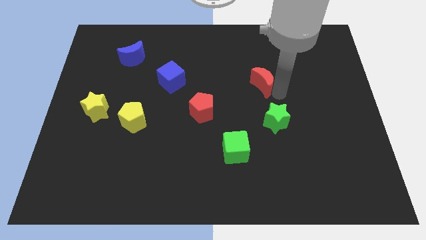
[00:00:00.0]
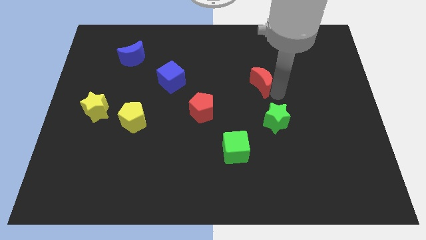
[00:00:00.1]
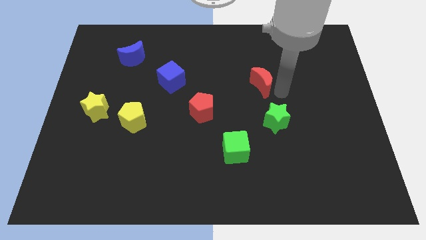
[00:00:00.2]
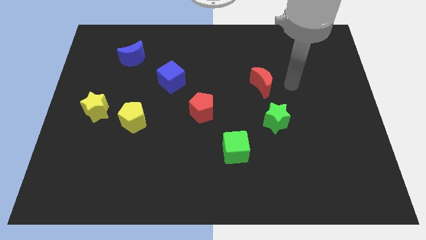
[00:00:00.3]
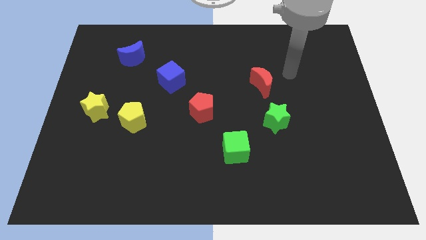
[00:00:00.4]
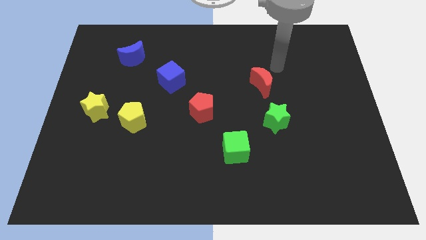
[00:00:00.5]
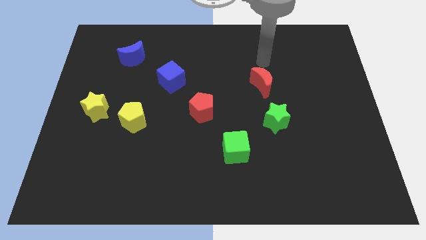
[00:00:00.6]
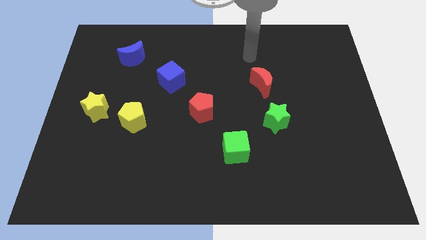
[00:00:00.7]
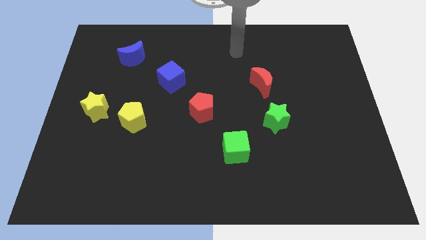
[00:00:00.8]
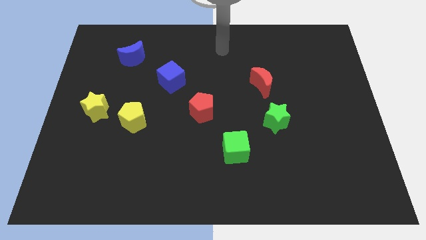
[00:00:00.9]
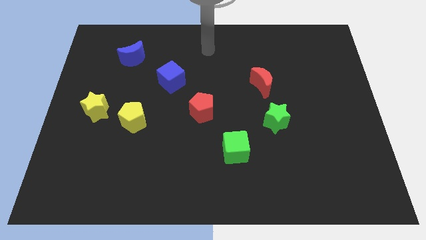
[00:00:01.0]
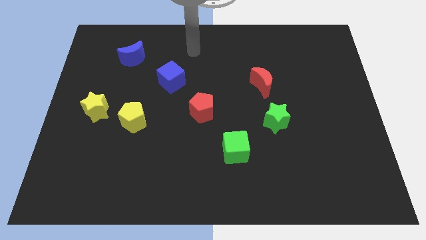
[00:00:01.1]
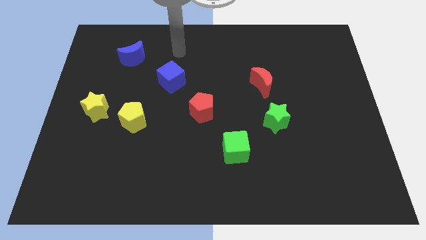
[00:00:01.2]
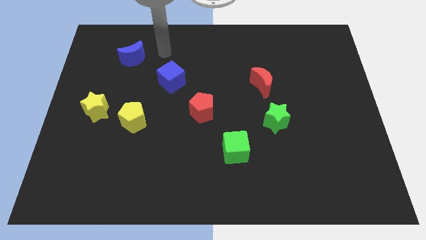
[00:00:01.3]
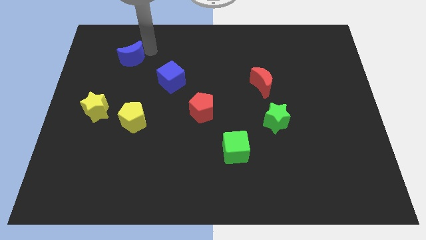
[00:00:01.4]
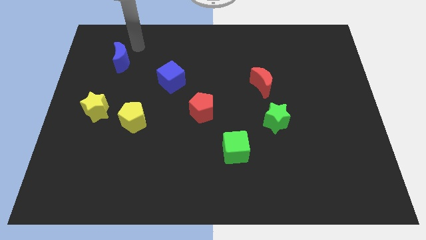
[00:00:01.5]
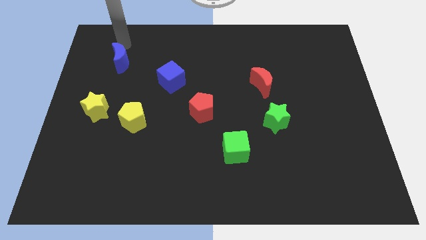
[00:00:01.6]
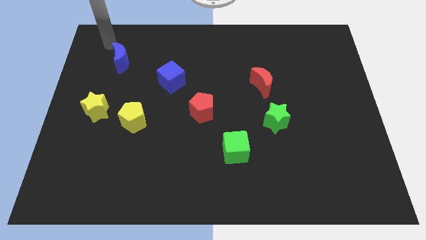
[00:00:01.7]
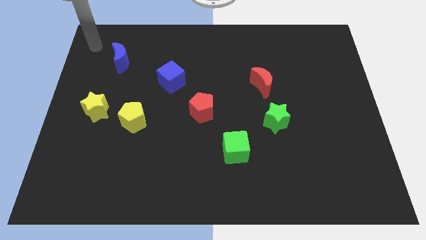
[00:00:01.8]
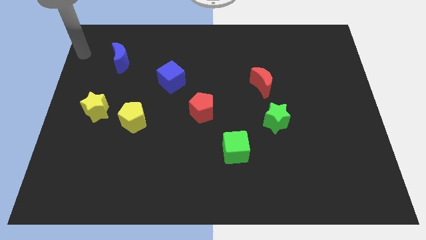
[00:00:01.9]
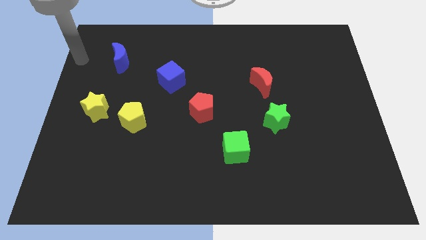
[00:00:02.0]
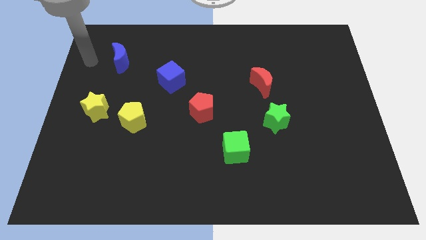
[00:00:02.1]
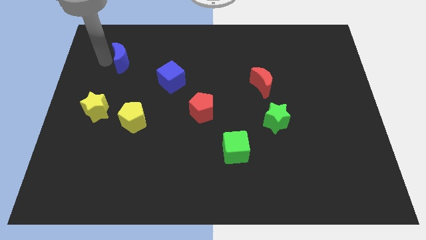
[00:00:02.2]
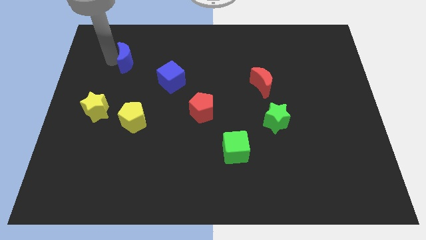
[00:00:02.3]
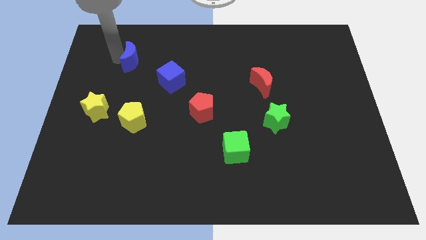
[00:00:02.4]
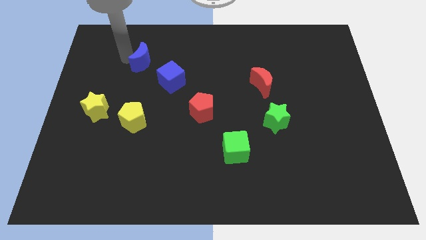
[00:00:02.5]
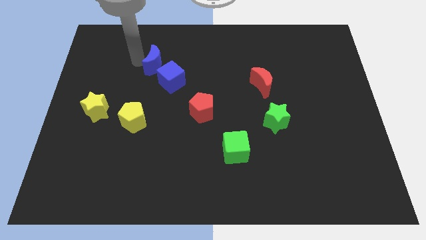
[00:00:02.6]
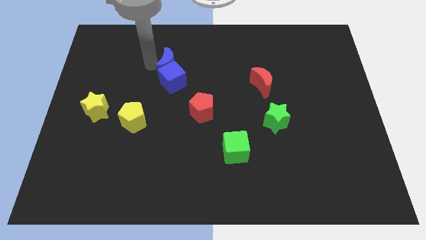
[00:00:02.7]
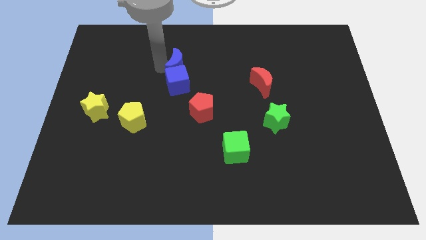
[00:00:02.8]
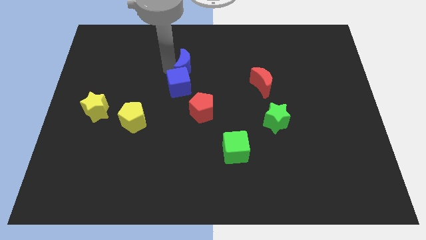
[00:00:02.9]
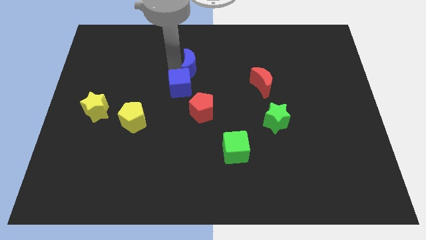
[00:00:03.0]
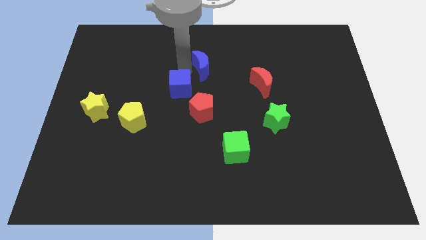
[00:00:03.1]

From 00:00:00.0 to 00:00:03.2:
move the blue moon into blue cube

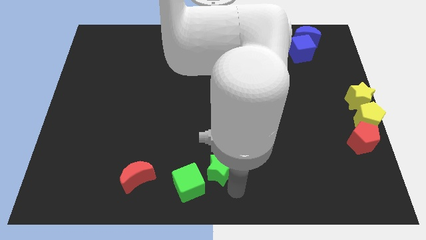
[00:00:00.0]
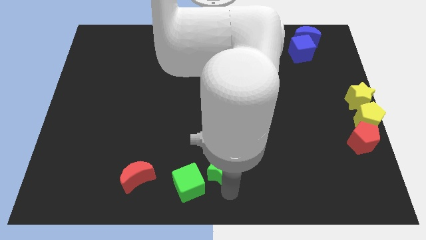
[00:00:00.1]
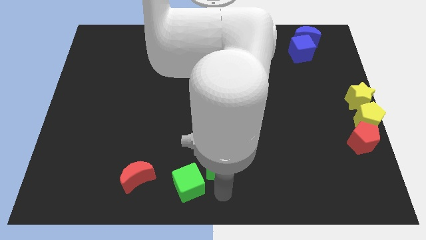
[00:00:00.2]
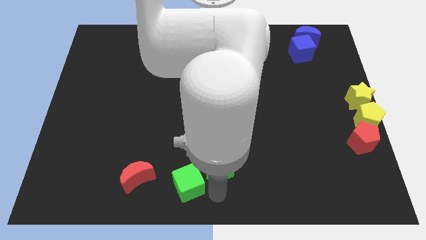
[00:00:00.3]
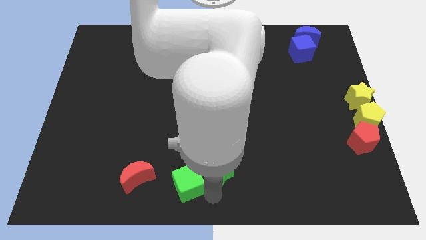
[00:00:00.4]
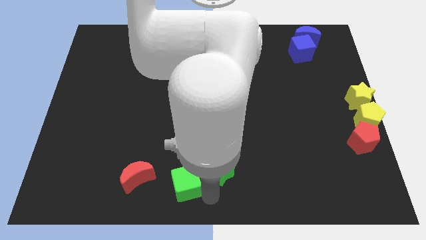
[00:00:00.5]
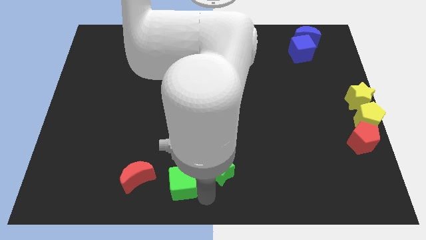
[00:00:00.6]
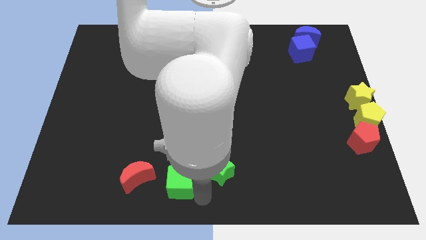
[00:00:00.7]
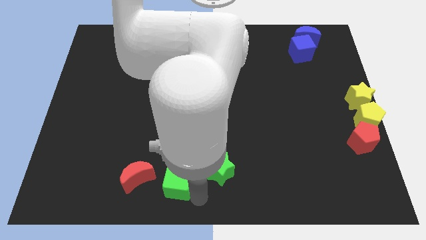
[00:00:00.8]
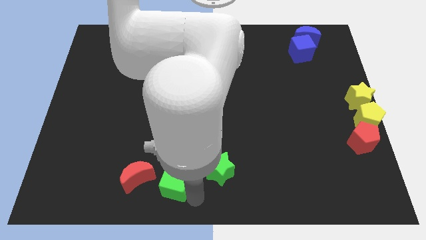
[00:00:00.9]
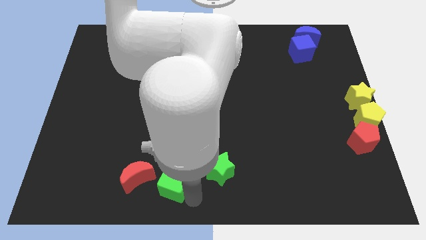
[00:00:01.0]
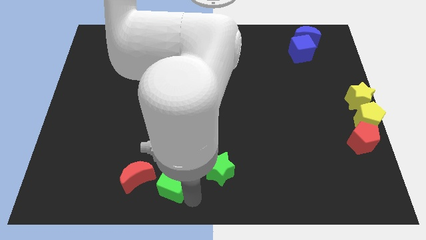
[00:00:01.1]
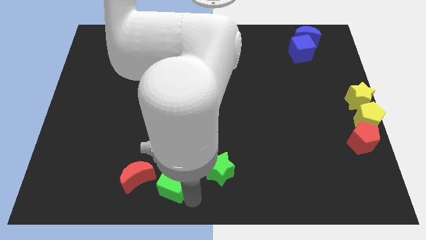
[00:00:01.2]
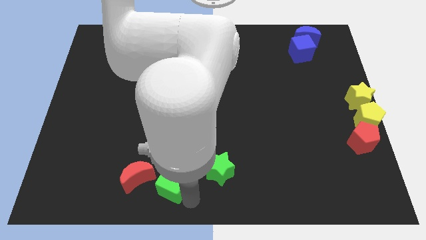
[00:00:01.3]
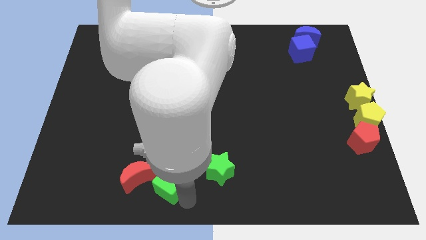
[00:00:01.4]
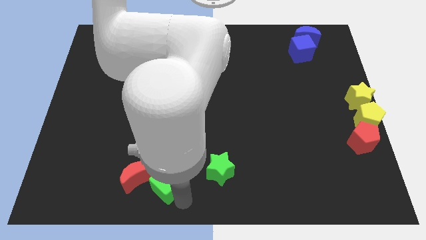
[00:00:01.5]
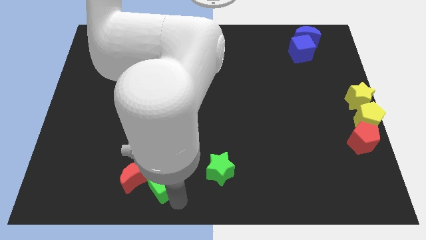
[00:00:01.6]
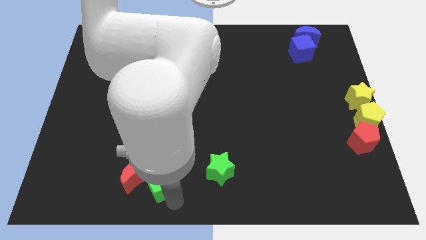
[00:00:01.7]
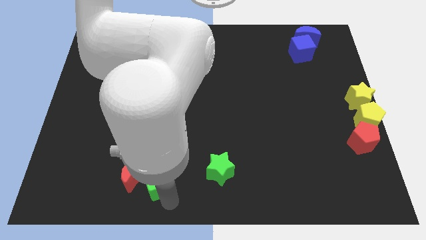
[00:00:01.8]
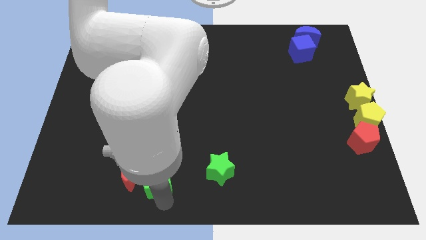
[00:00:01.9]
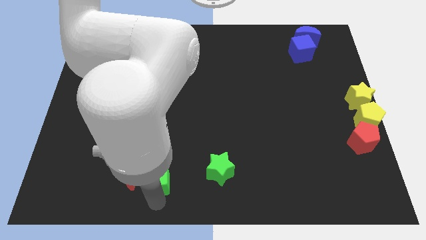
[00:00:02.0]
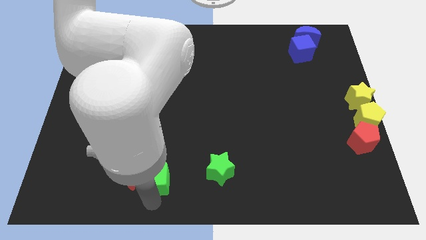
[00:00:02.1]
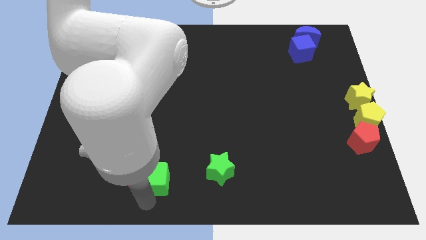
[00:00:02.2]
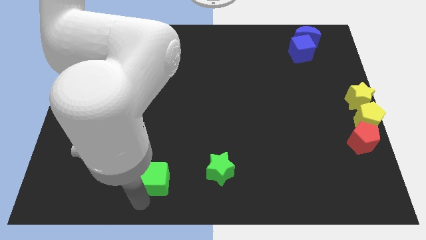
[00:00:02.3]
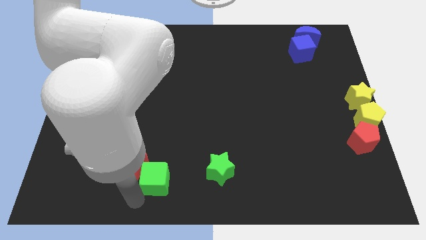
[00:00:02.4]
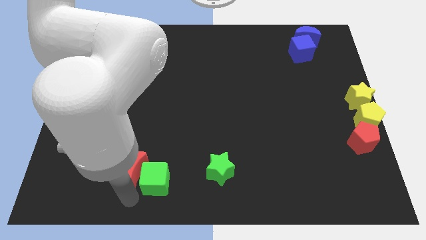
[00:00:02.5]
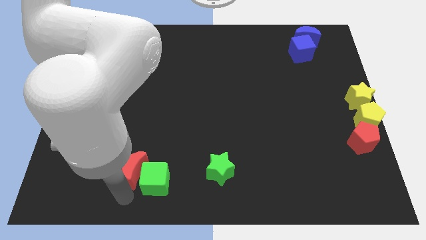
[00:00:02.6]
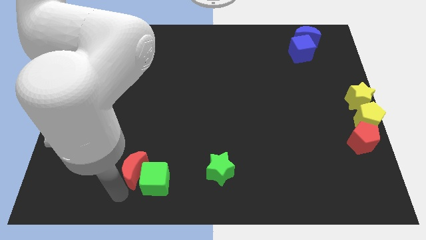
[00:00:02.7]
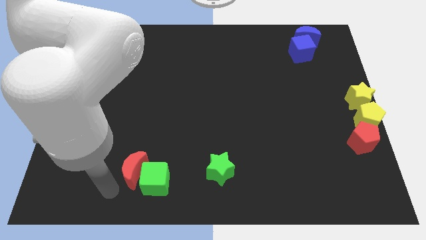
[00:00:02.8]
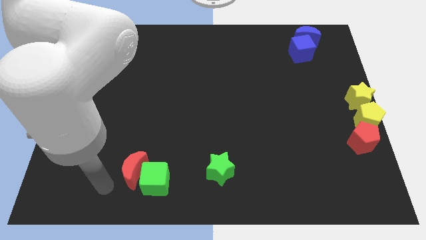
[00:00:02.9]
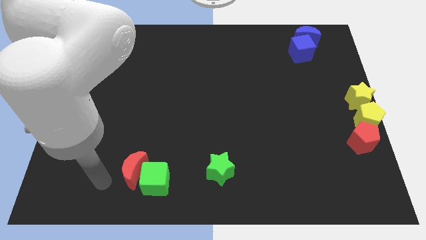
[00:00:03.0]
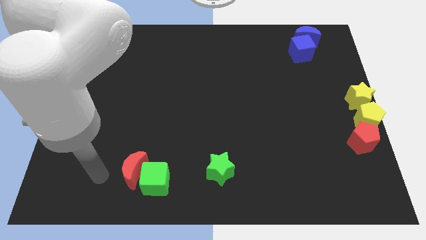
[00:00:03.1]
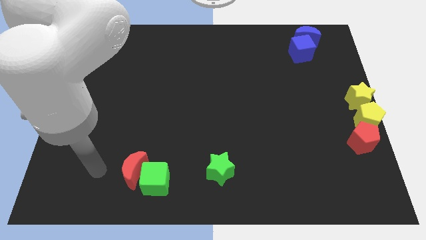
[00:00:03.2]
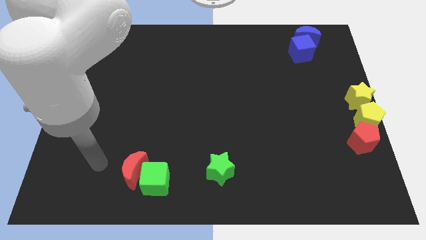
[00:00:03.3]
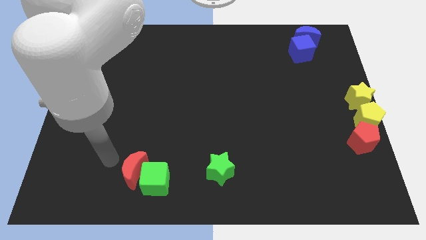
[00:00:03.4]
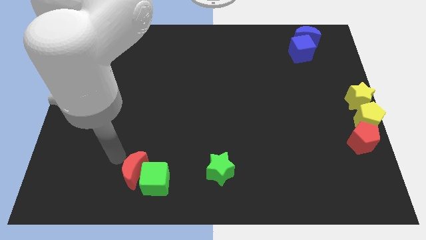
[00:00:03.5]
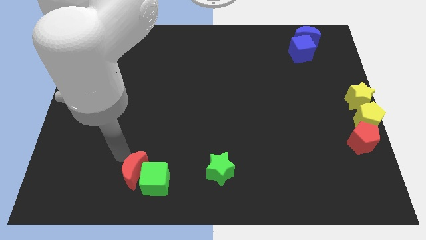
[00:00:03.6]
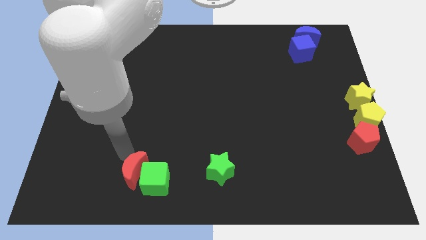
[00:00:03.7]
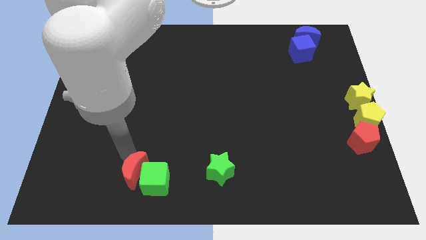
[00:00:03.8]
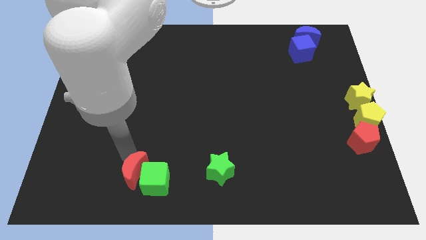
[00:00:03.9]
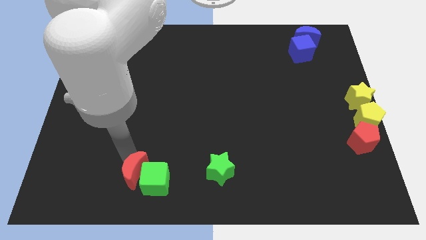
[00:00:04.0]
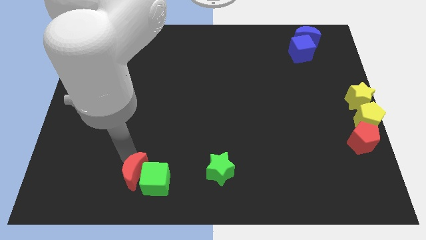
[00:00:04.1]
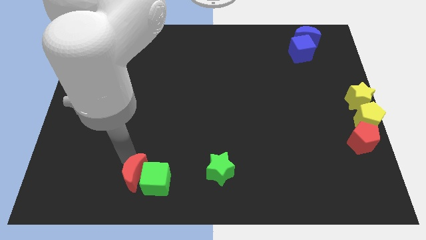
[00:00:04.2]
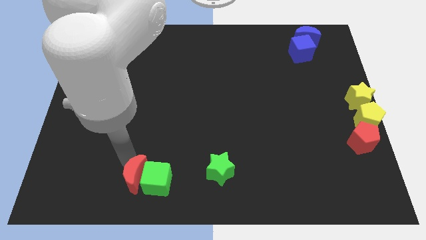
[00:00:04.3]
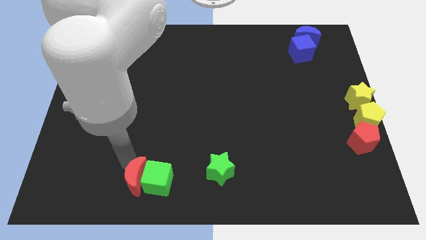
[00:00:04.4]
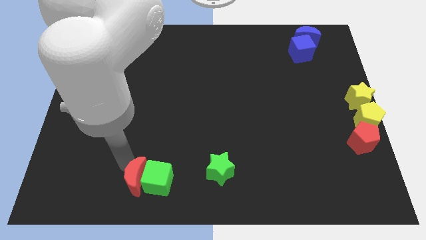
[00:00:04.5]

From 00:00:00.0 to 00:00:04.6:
move the green cube into red crescent

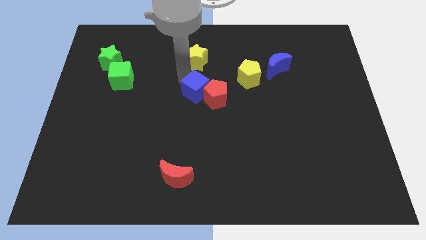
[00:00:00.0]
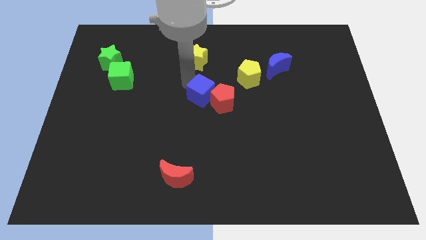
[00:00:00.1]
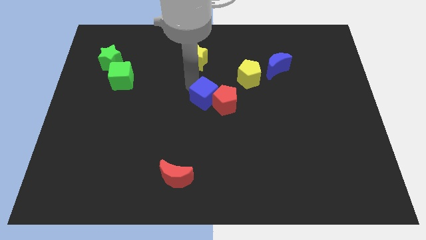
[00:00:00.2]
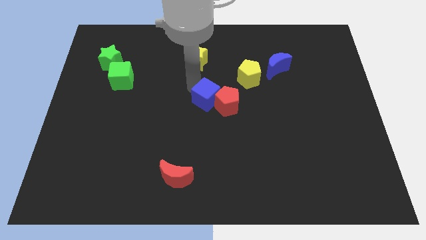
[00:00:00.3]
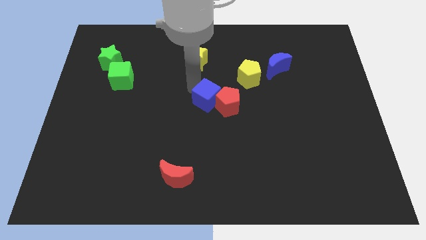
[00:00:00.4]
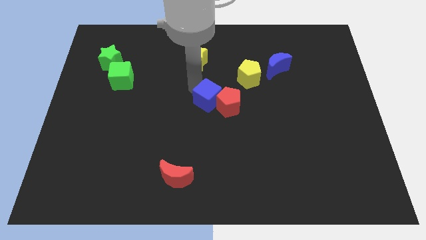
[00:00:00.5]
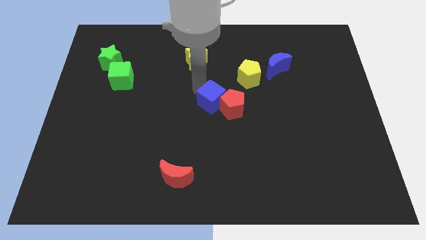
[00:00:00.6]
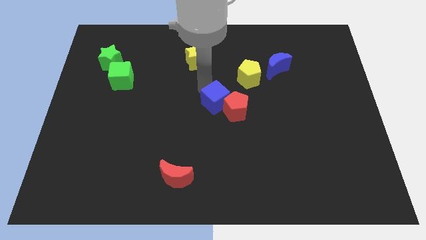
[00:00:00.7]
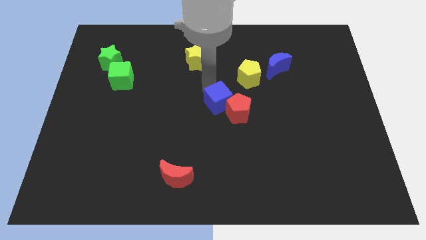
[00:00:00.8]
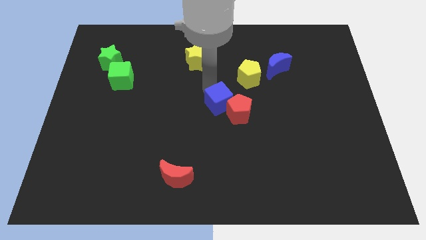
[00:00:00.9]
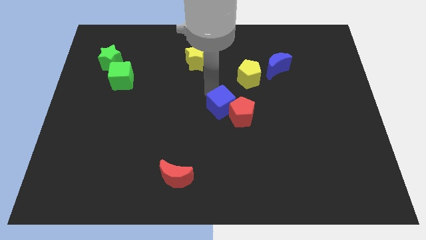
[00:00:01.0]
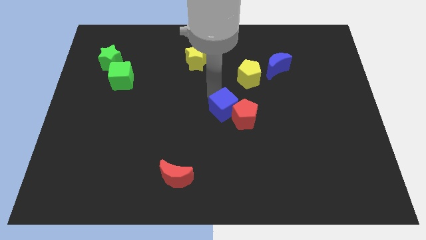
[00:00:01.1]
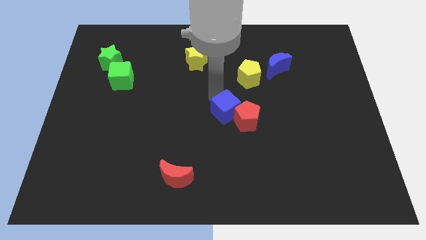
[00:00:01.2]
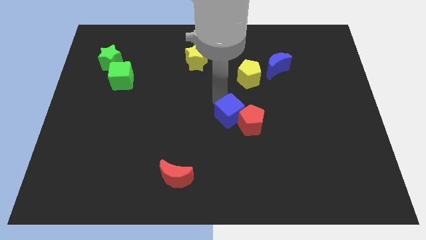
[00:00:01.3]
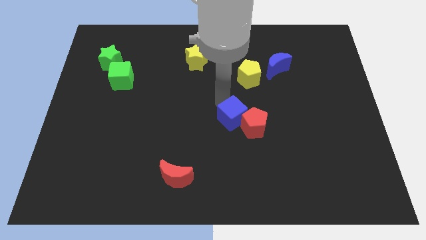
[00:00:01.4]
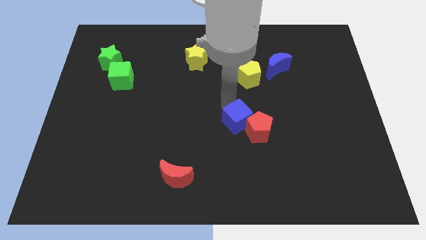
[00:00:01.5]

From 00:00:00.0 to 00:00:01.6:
place the blue cube and red pentagon together below the yellow pentagon
